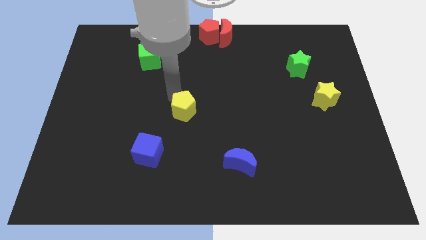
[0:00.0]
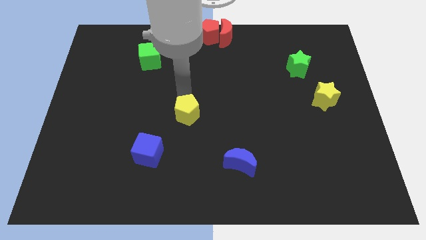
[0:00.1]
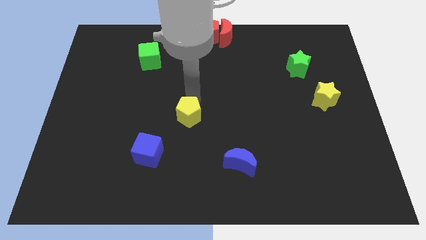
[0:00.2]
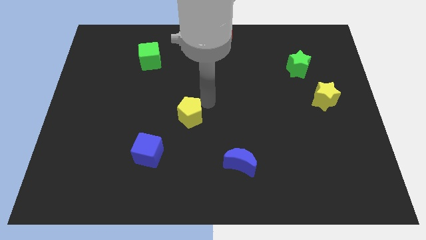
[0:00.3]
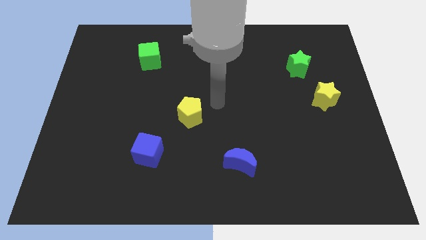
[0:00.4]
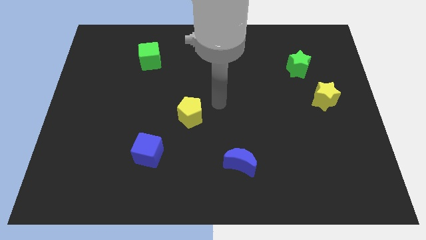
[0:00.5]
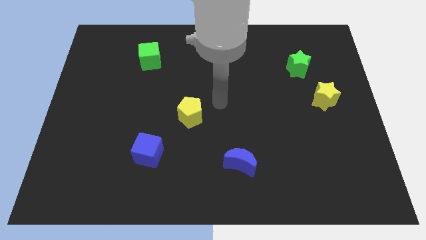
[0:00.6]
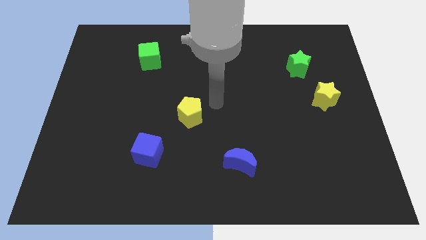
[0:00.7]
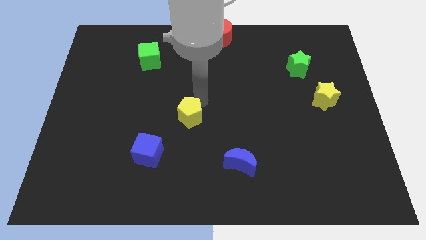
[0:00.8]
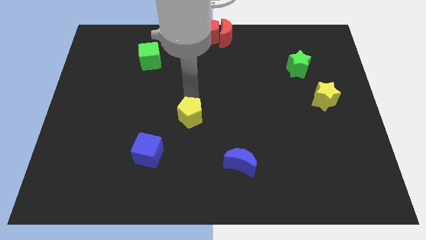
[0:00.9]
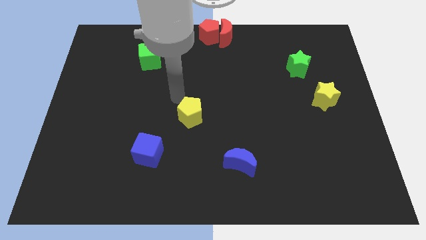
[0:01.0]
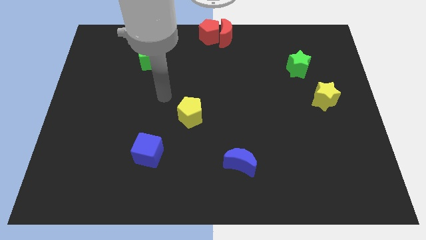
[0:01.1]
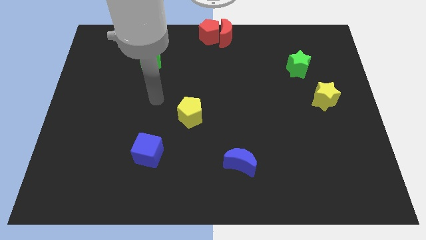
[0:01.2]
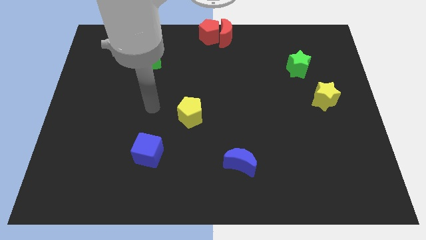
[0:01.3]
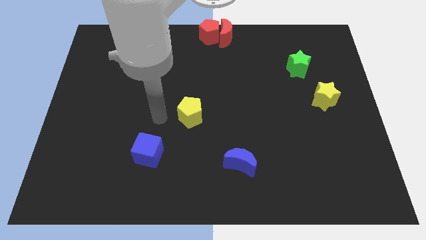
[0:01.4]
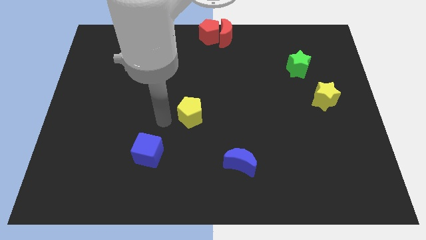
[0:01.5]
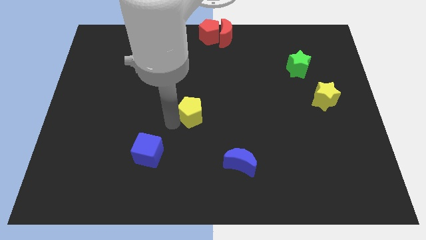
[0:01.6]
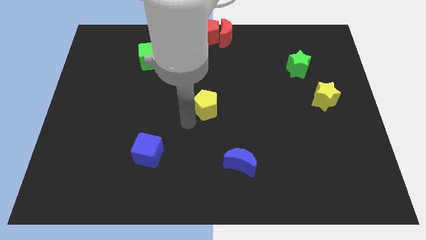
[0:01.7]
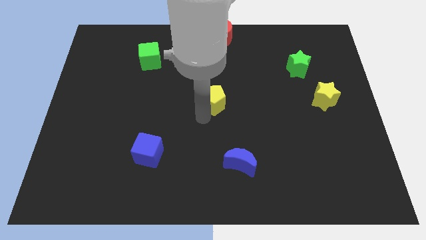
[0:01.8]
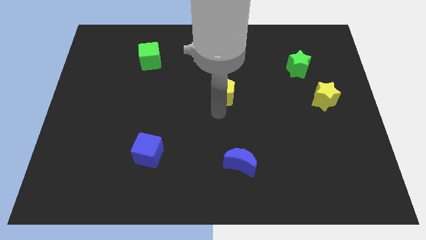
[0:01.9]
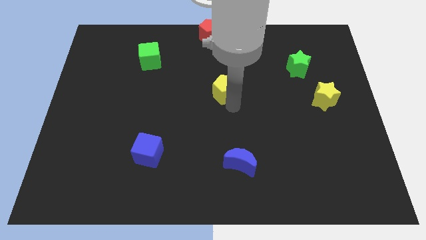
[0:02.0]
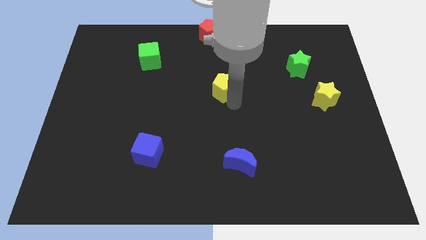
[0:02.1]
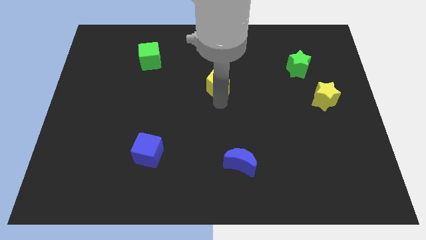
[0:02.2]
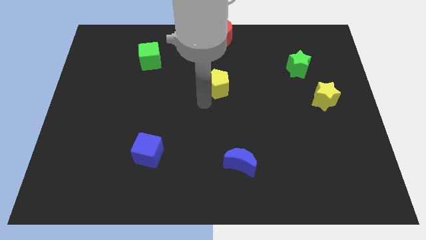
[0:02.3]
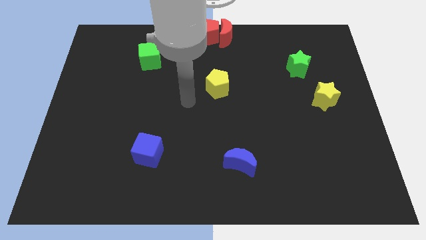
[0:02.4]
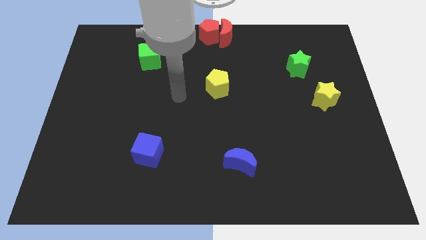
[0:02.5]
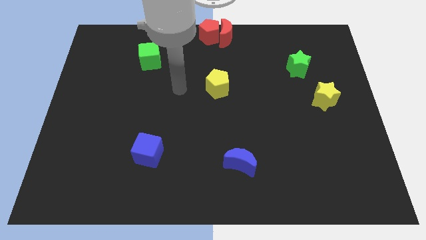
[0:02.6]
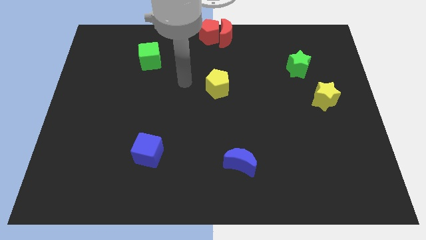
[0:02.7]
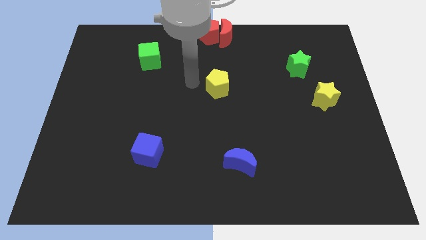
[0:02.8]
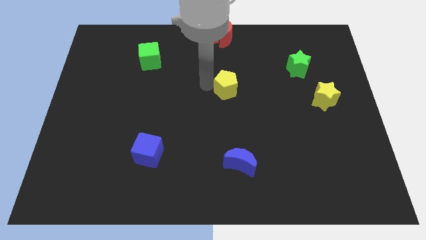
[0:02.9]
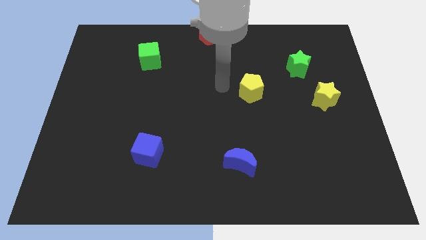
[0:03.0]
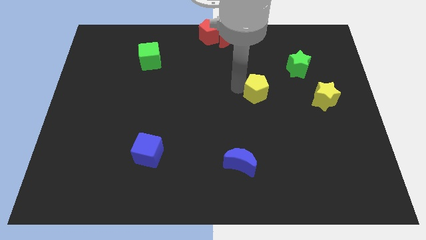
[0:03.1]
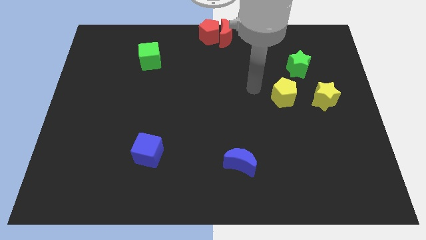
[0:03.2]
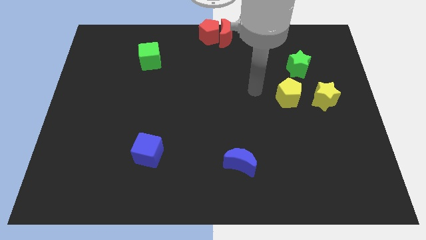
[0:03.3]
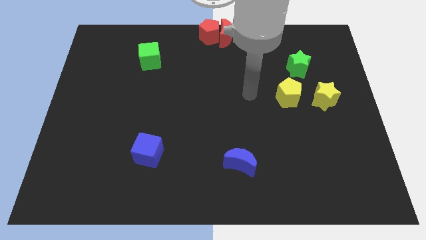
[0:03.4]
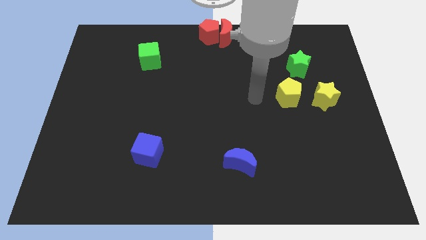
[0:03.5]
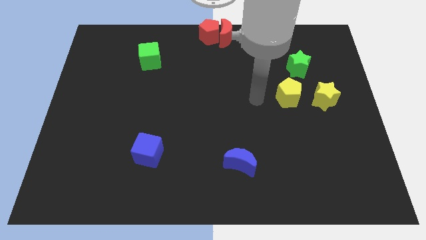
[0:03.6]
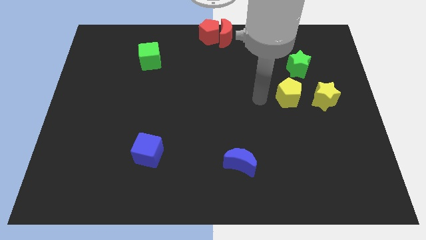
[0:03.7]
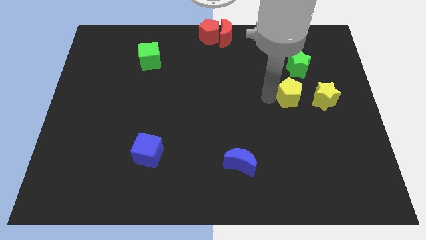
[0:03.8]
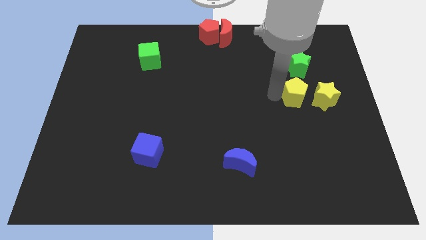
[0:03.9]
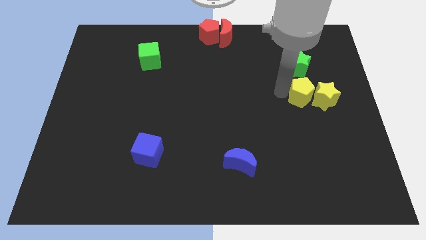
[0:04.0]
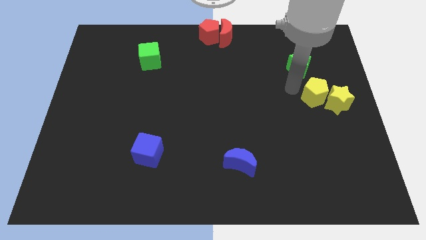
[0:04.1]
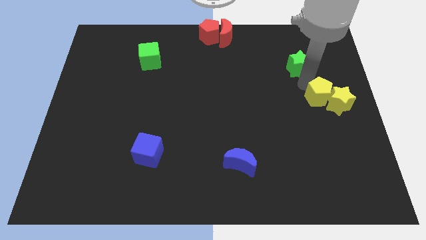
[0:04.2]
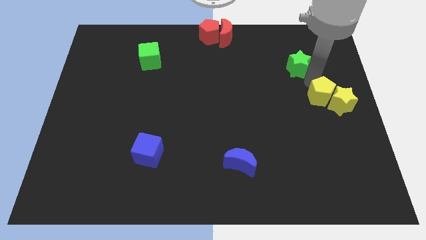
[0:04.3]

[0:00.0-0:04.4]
move the yellow pentagon into the yellow star

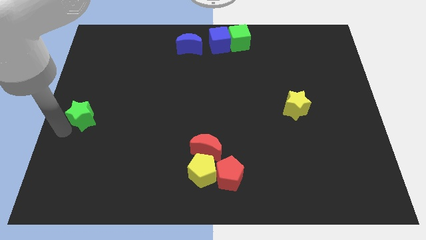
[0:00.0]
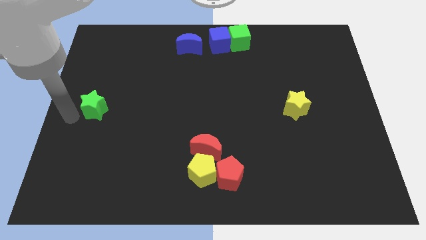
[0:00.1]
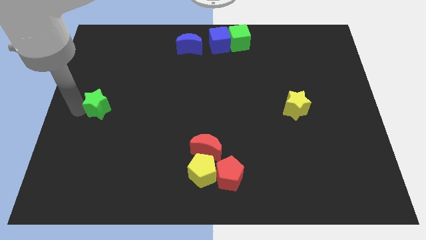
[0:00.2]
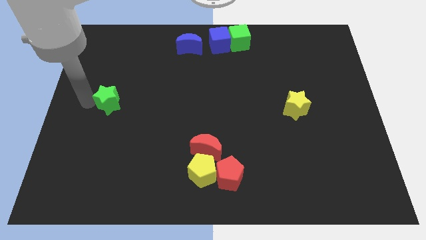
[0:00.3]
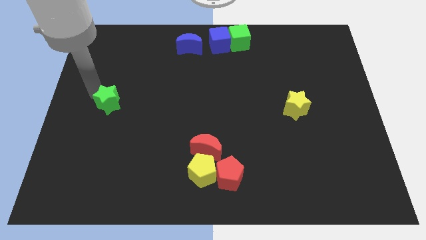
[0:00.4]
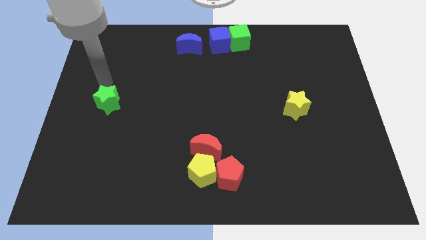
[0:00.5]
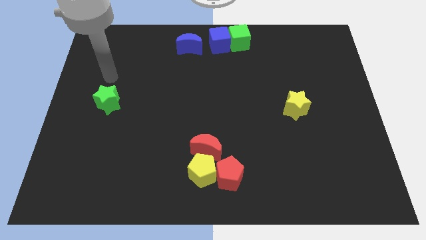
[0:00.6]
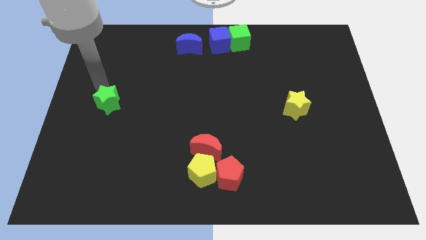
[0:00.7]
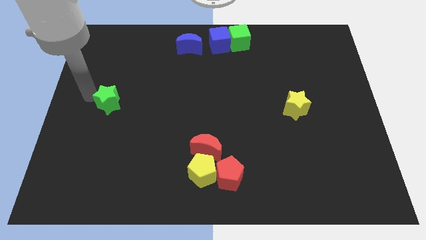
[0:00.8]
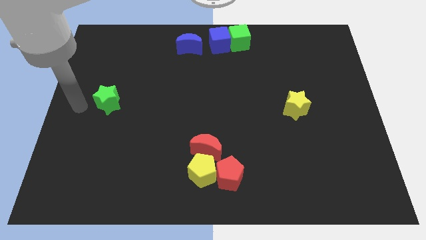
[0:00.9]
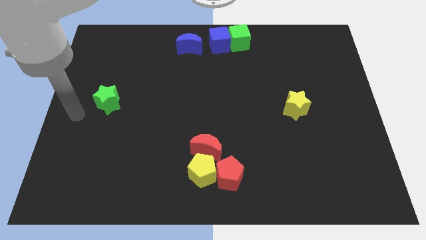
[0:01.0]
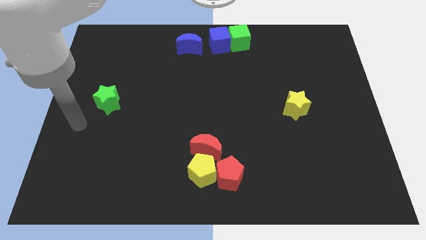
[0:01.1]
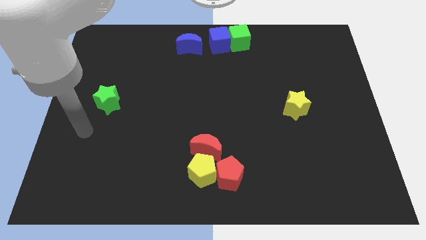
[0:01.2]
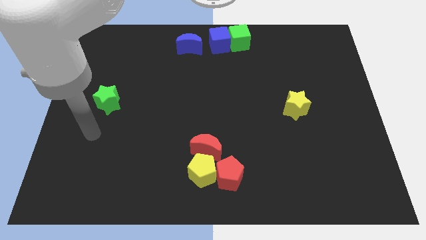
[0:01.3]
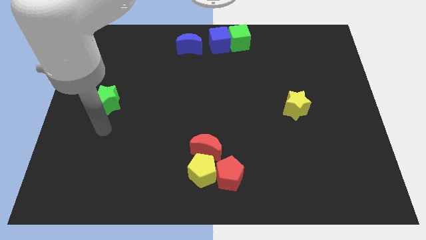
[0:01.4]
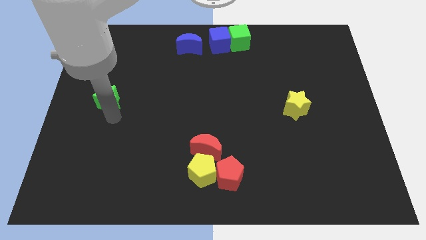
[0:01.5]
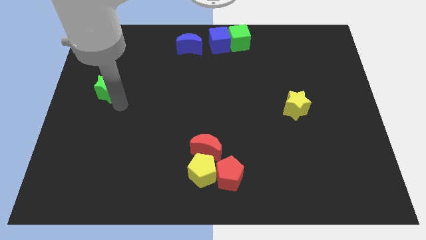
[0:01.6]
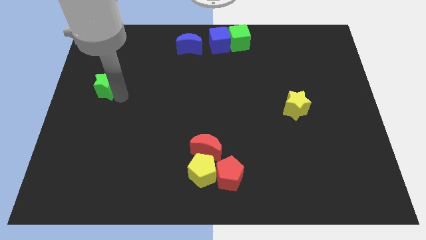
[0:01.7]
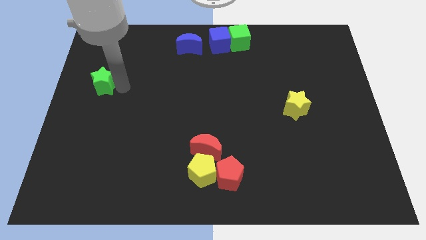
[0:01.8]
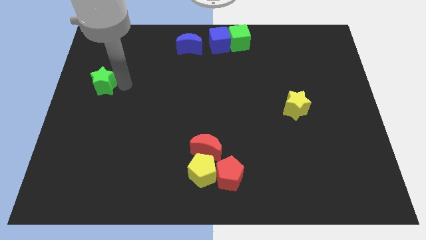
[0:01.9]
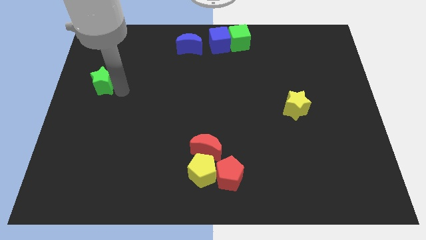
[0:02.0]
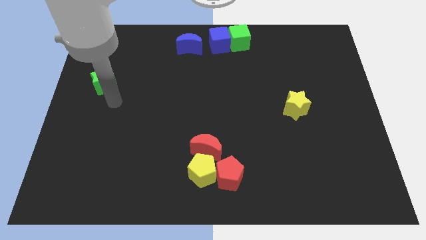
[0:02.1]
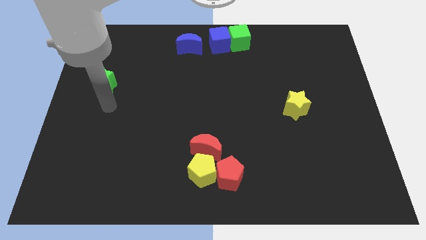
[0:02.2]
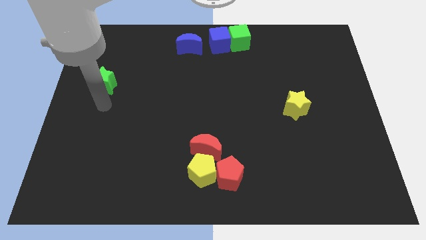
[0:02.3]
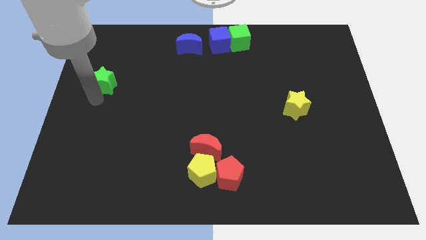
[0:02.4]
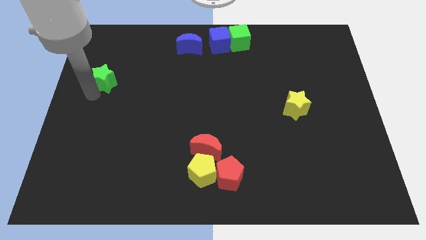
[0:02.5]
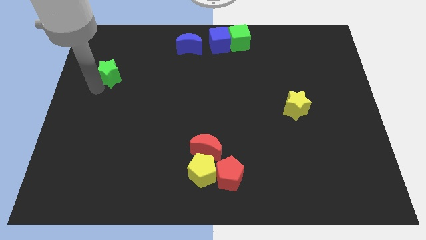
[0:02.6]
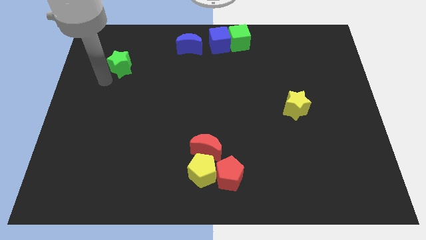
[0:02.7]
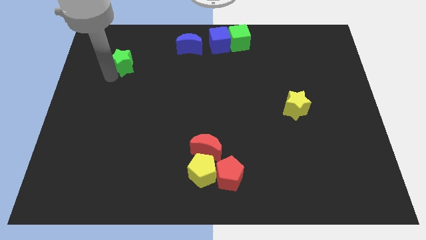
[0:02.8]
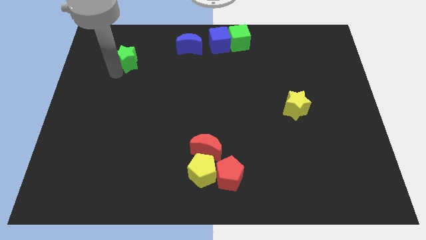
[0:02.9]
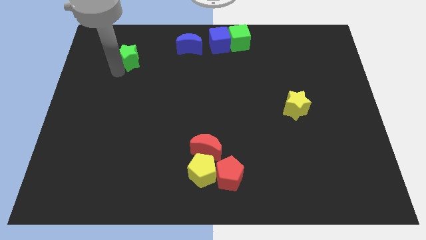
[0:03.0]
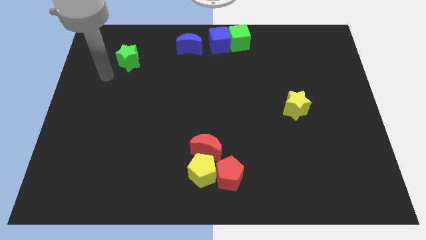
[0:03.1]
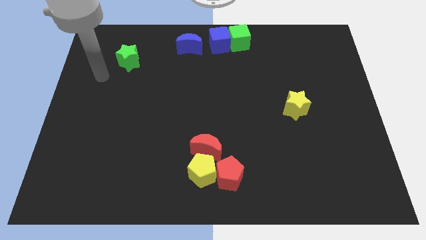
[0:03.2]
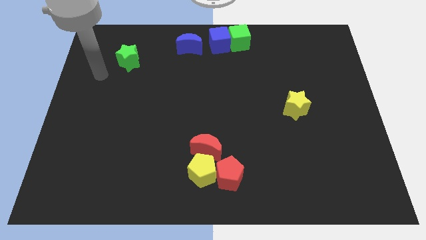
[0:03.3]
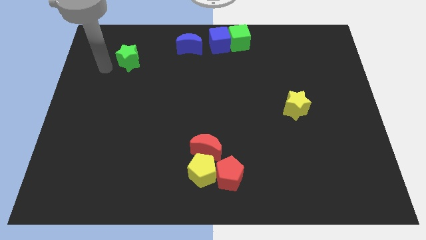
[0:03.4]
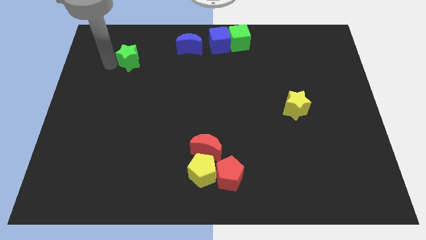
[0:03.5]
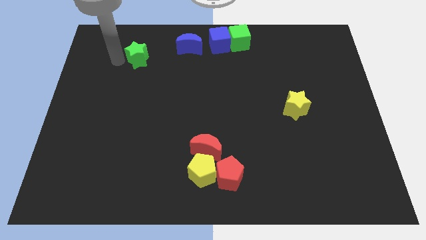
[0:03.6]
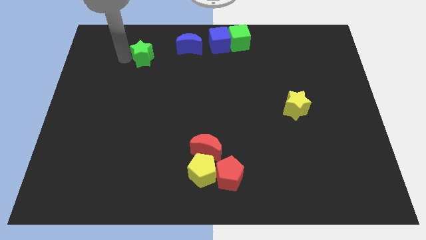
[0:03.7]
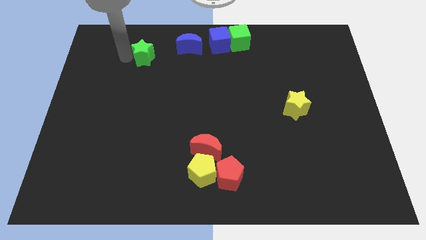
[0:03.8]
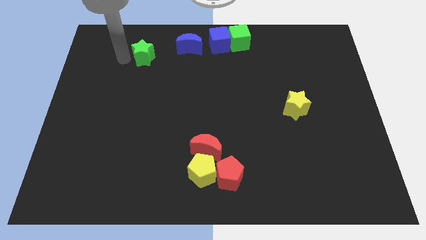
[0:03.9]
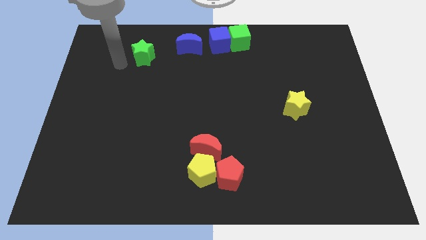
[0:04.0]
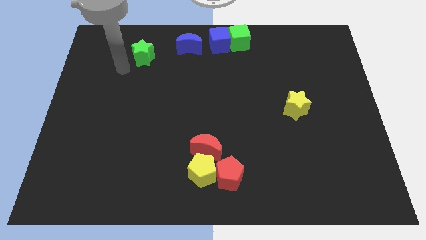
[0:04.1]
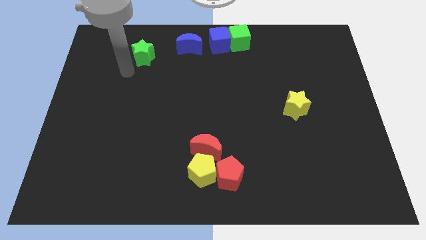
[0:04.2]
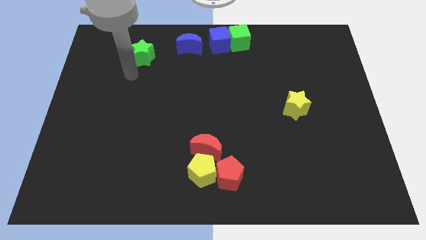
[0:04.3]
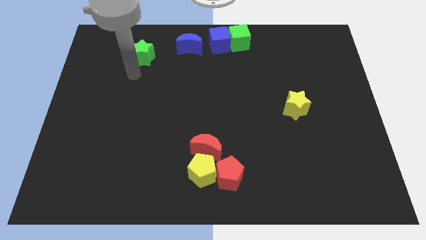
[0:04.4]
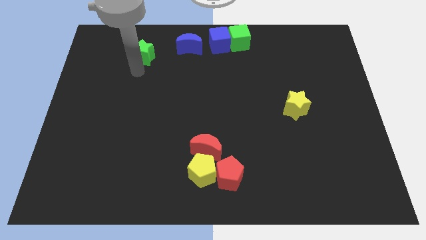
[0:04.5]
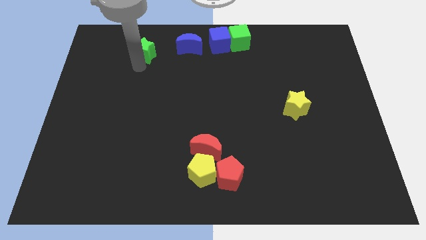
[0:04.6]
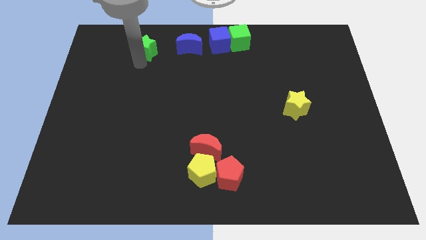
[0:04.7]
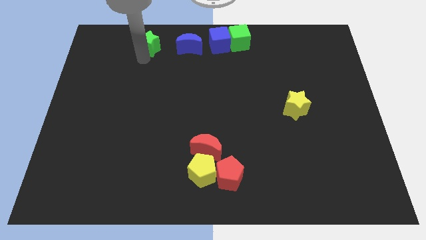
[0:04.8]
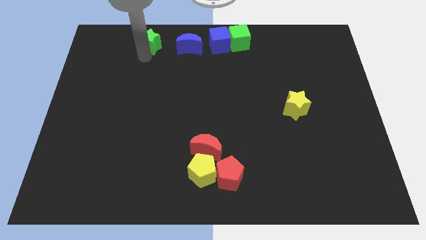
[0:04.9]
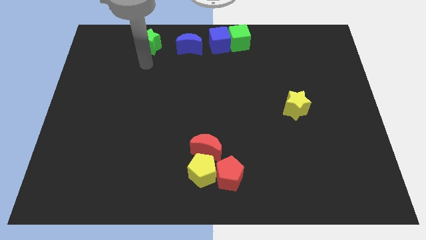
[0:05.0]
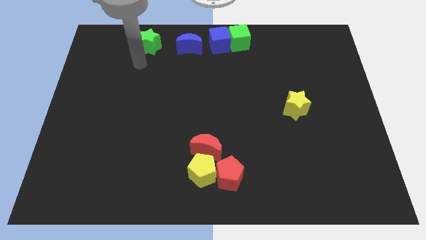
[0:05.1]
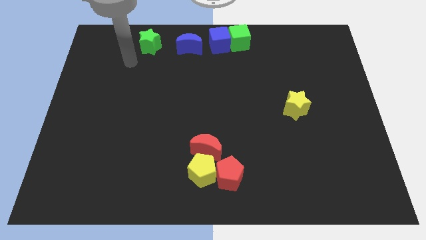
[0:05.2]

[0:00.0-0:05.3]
place the green star horizontally to the left side of the blue moon
